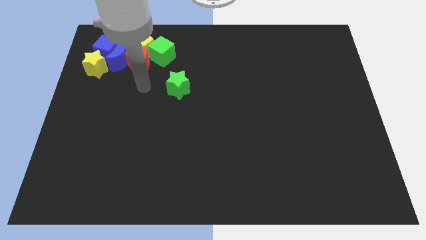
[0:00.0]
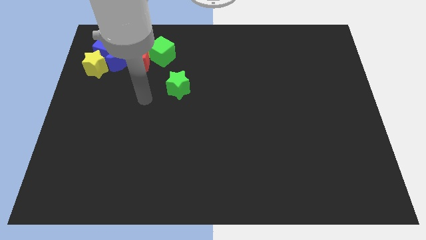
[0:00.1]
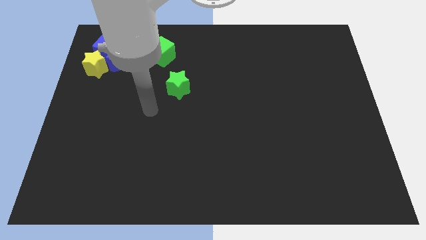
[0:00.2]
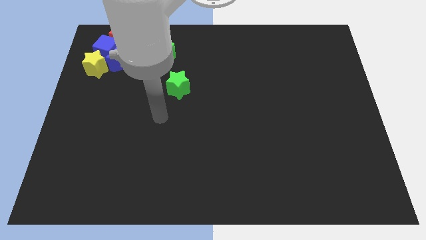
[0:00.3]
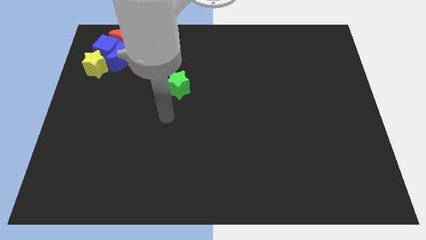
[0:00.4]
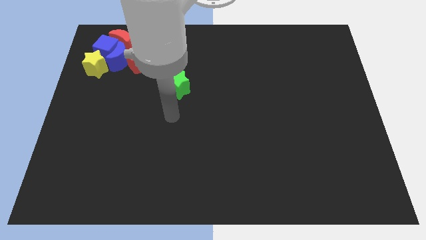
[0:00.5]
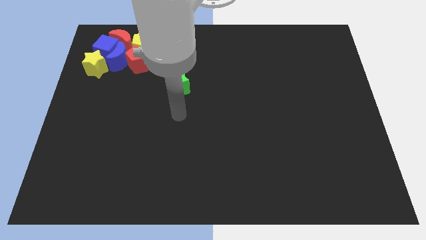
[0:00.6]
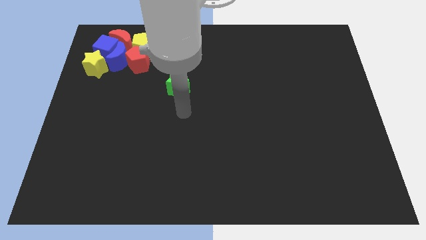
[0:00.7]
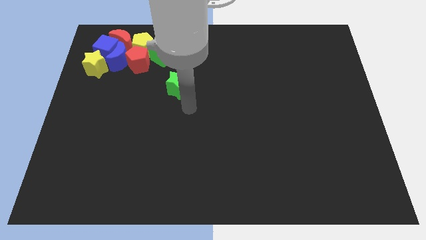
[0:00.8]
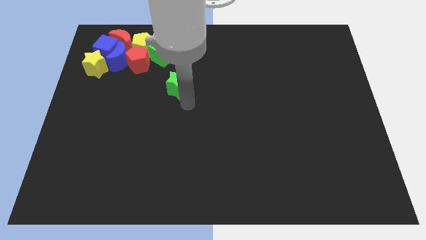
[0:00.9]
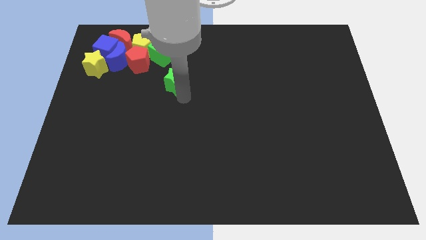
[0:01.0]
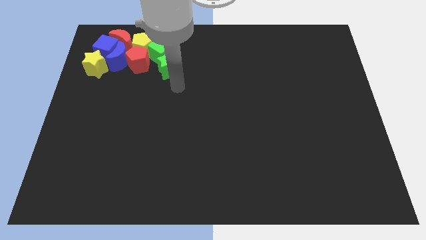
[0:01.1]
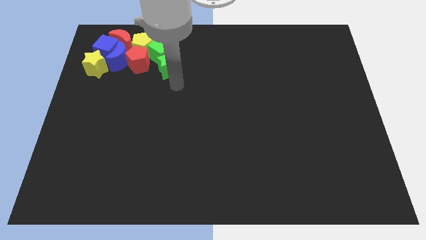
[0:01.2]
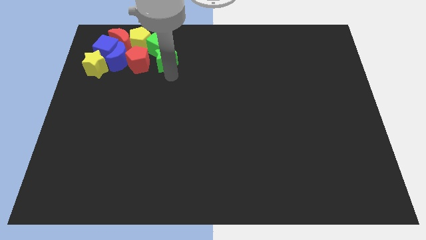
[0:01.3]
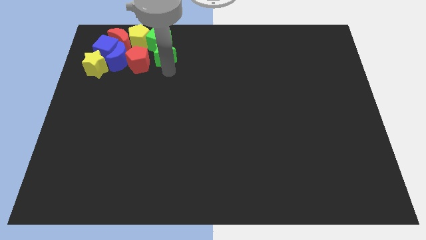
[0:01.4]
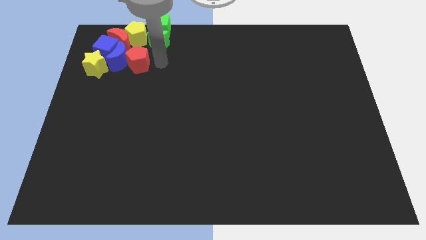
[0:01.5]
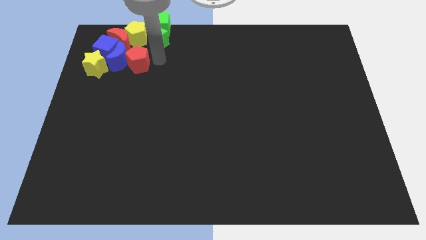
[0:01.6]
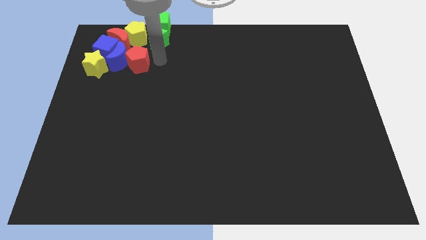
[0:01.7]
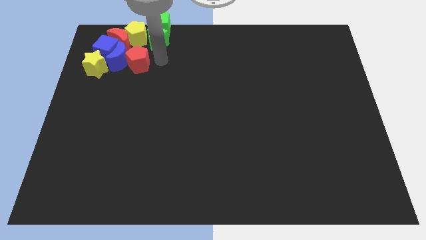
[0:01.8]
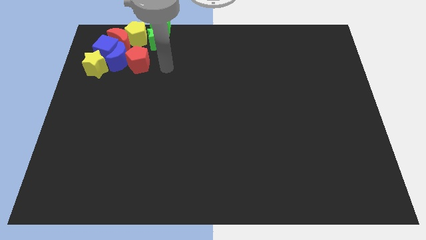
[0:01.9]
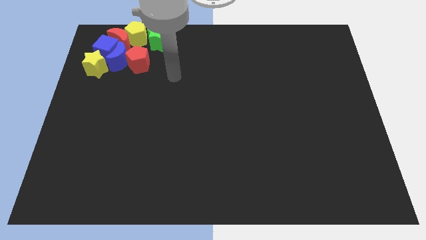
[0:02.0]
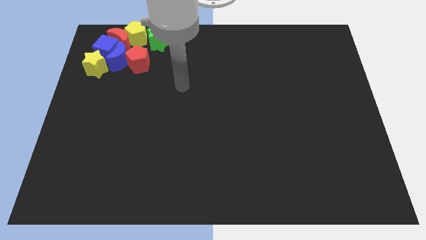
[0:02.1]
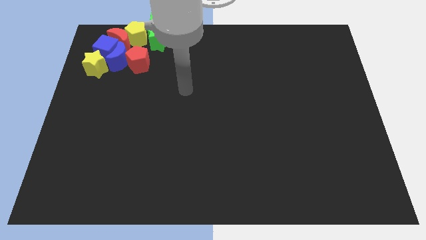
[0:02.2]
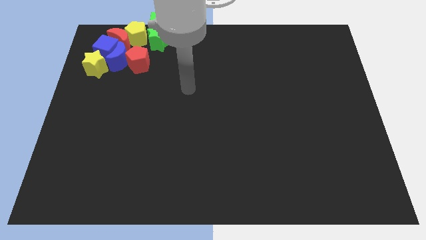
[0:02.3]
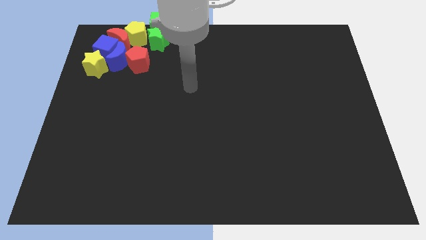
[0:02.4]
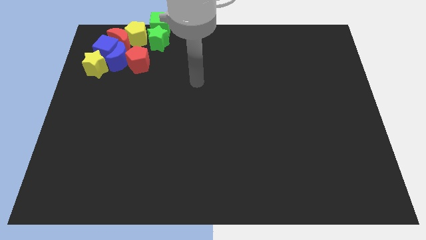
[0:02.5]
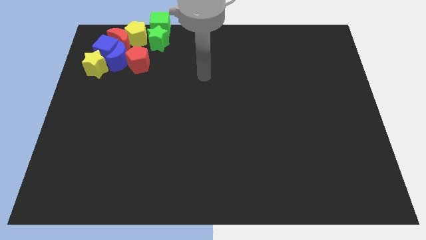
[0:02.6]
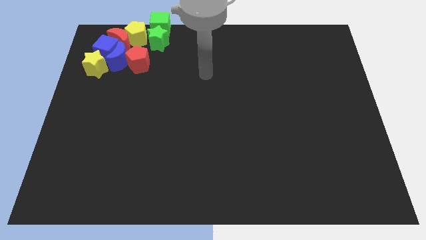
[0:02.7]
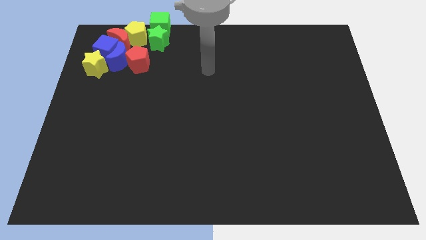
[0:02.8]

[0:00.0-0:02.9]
move the green star and the green cube towards the top of the board

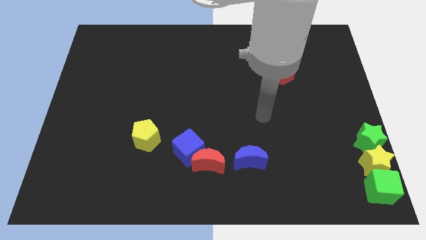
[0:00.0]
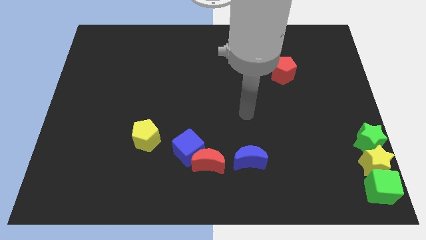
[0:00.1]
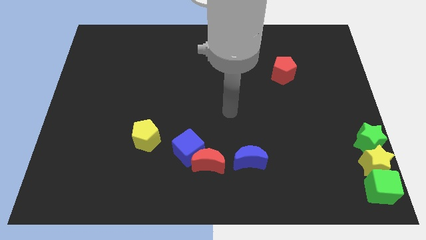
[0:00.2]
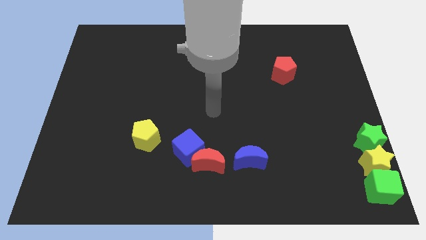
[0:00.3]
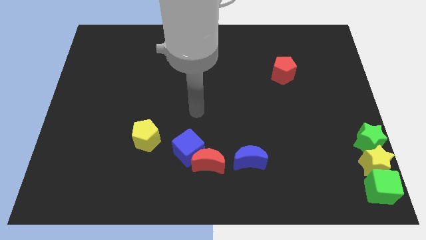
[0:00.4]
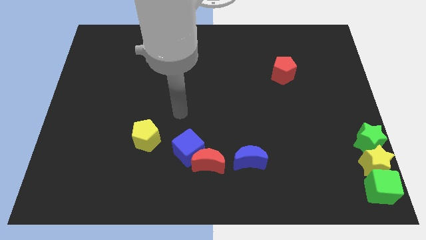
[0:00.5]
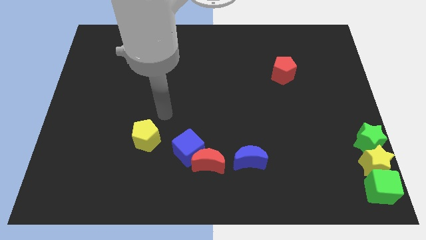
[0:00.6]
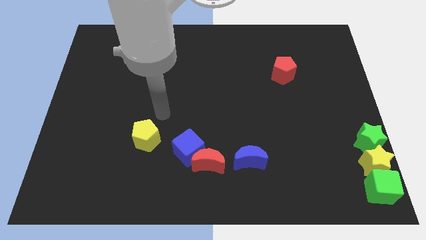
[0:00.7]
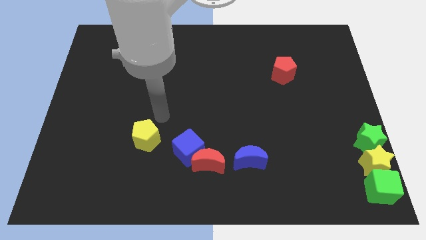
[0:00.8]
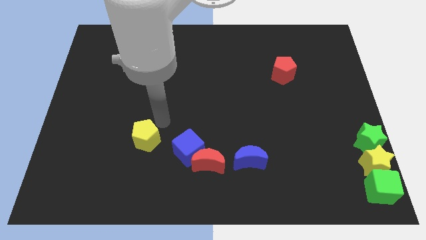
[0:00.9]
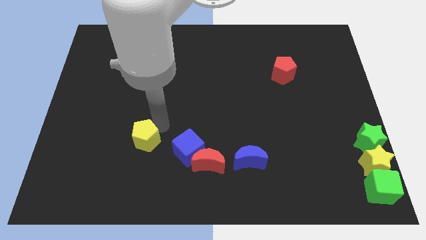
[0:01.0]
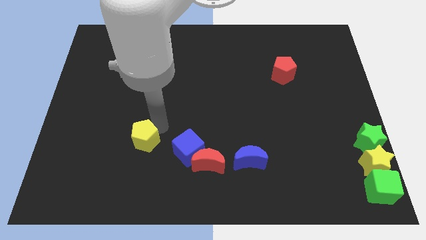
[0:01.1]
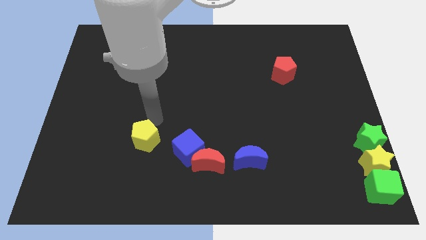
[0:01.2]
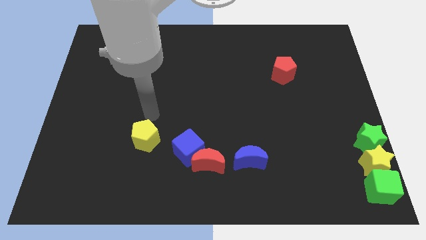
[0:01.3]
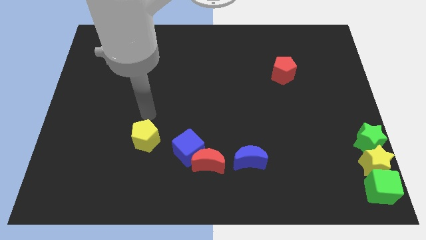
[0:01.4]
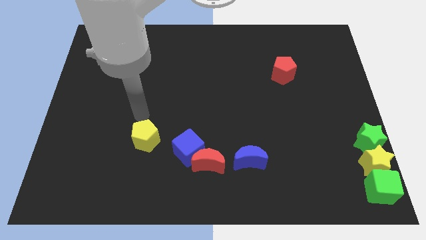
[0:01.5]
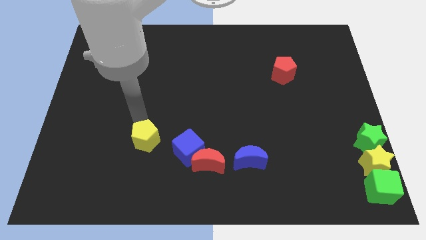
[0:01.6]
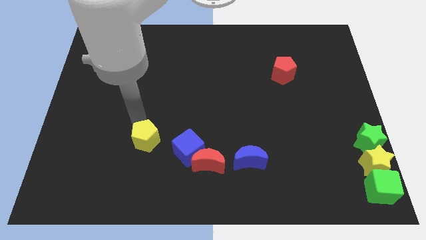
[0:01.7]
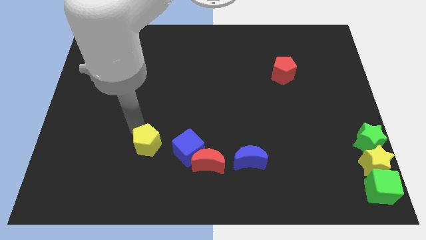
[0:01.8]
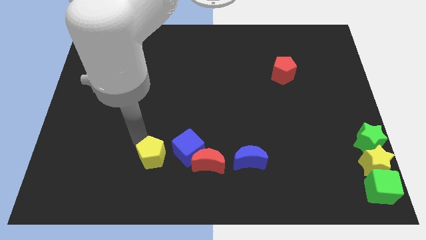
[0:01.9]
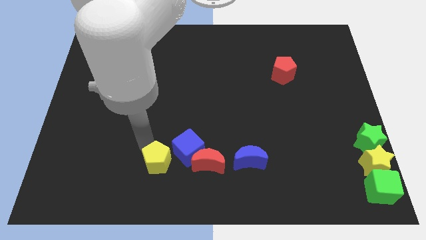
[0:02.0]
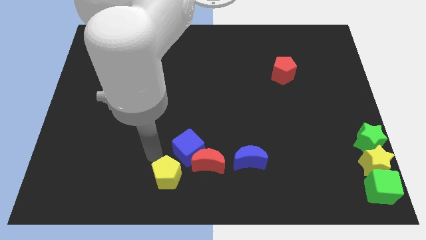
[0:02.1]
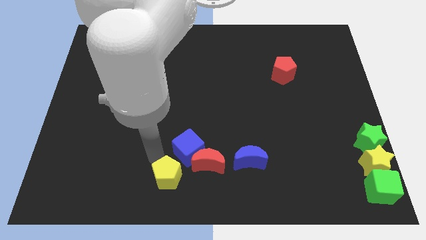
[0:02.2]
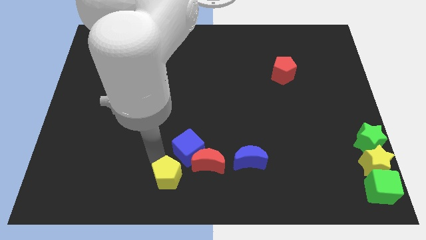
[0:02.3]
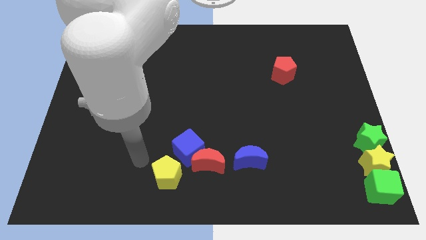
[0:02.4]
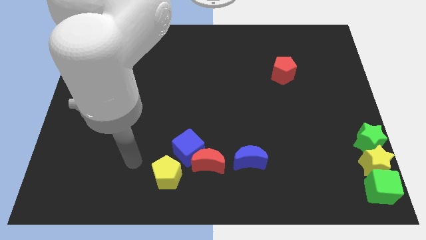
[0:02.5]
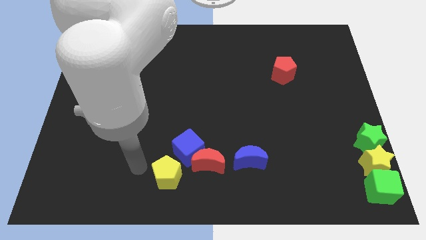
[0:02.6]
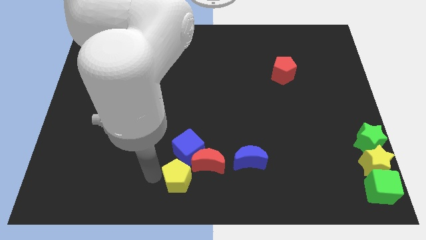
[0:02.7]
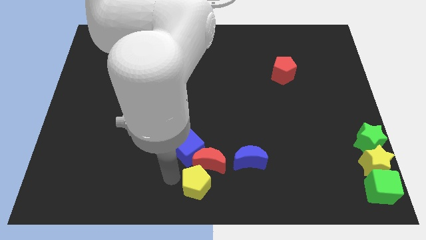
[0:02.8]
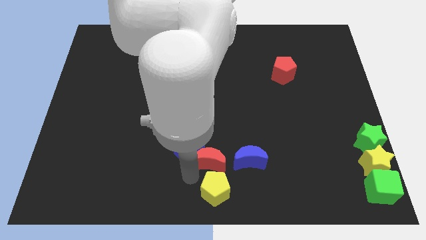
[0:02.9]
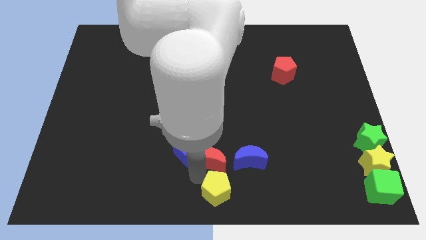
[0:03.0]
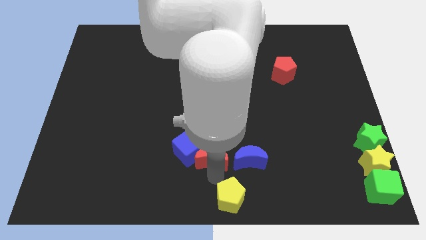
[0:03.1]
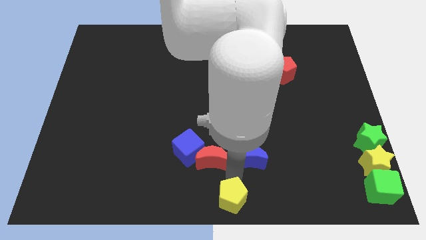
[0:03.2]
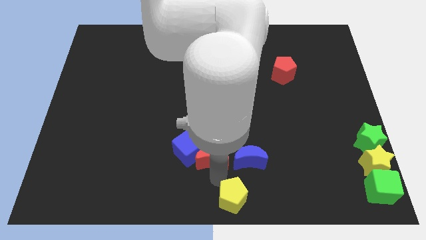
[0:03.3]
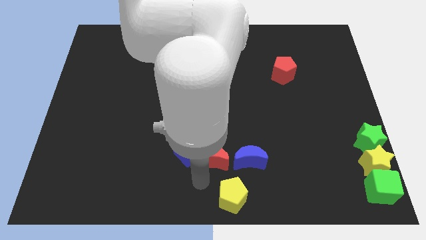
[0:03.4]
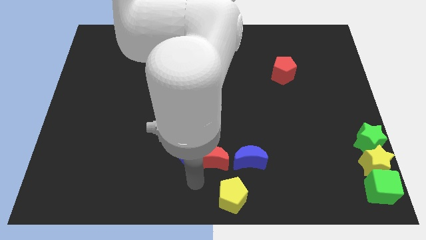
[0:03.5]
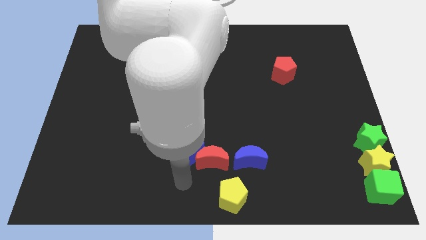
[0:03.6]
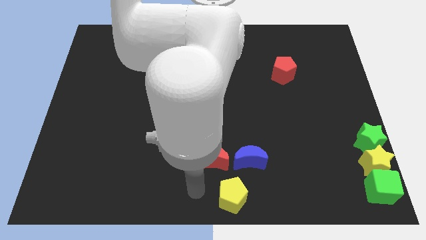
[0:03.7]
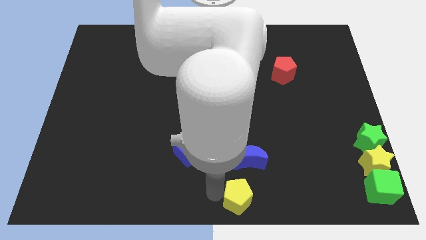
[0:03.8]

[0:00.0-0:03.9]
place the yellow pentagon vertically below the blue crescent

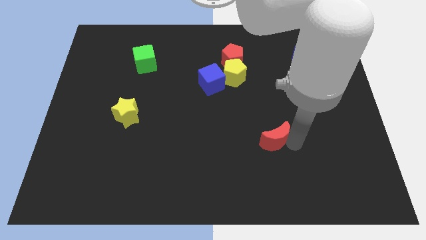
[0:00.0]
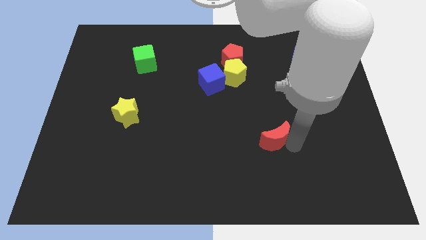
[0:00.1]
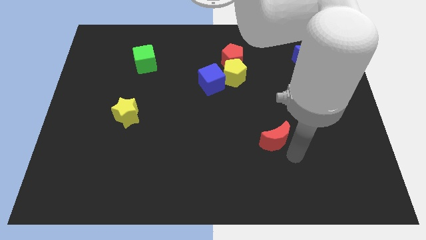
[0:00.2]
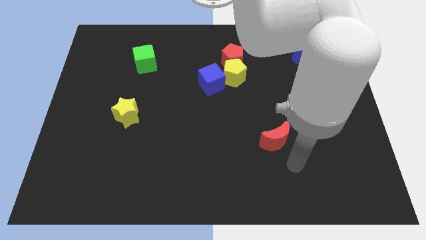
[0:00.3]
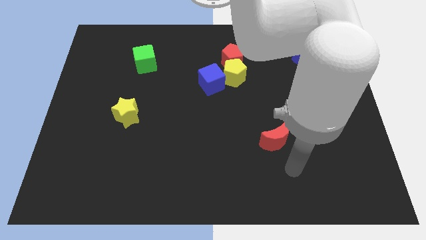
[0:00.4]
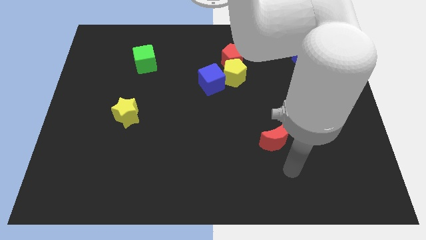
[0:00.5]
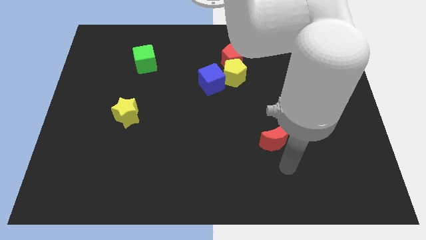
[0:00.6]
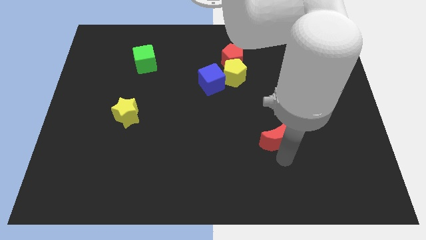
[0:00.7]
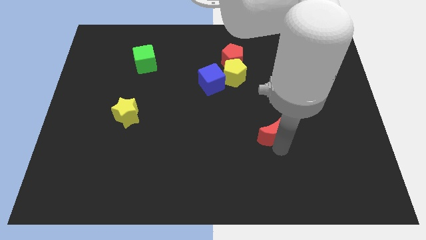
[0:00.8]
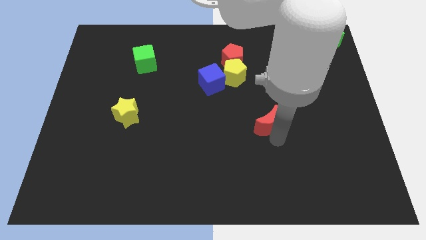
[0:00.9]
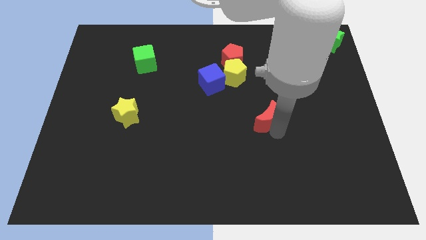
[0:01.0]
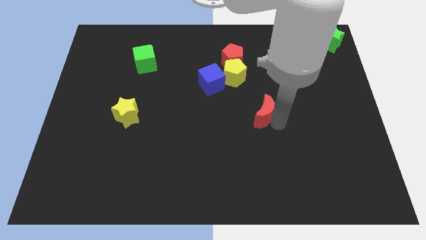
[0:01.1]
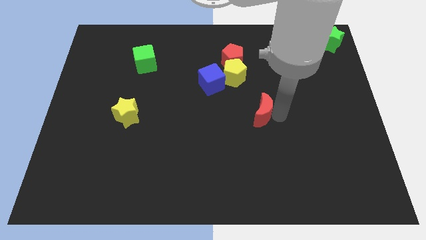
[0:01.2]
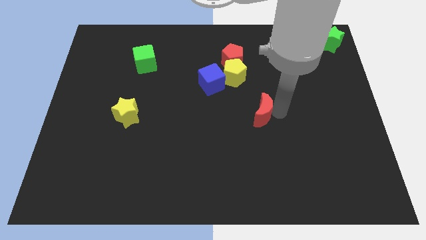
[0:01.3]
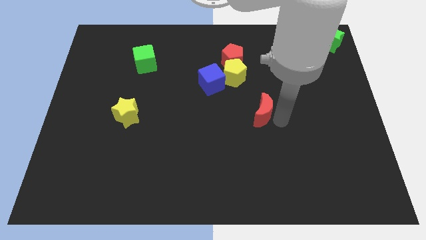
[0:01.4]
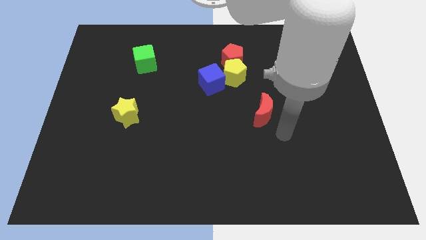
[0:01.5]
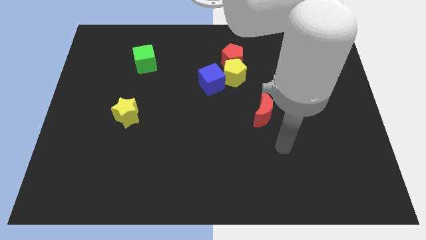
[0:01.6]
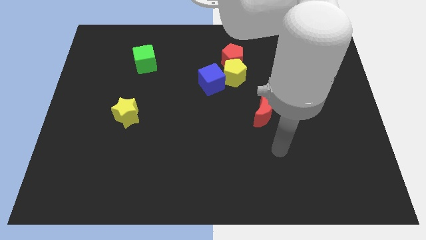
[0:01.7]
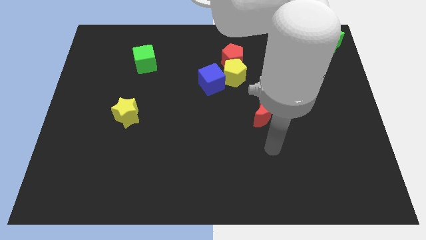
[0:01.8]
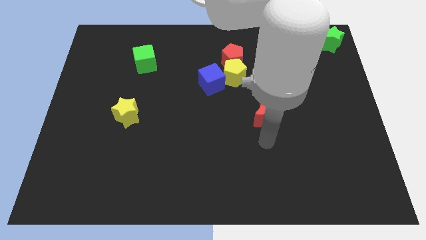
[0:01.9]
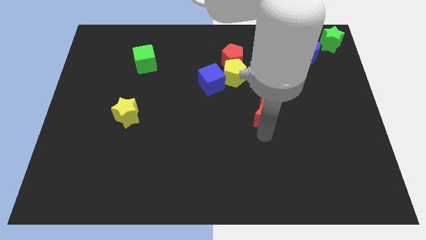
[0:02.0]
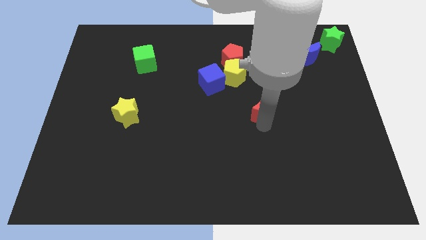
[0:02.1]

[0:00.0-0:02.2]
move the red moon to the center of the board

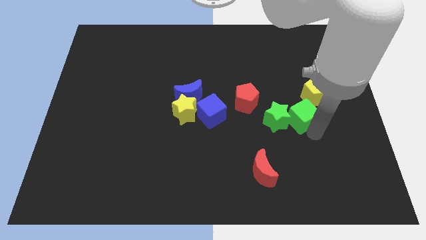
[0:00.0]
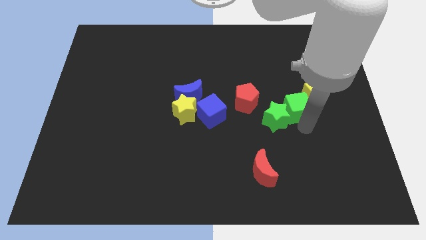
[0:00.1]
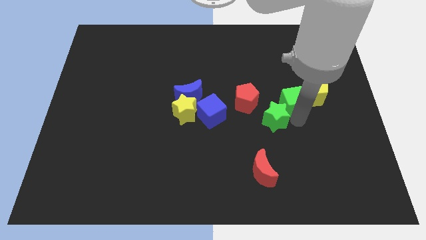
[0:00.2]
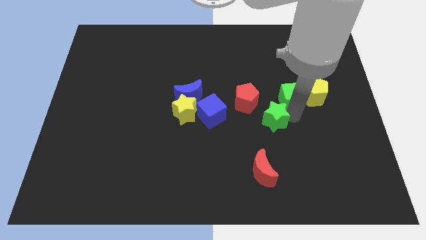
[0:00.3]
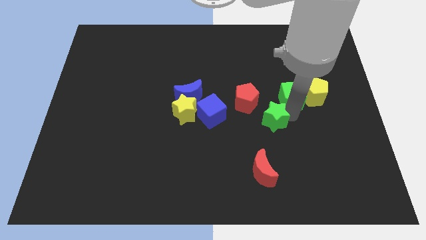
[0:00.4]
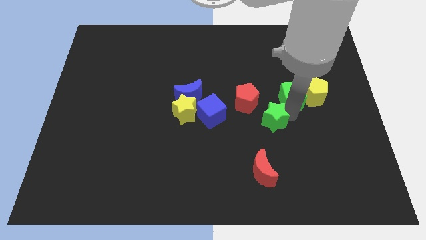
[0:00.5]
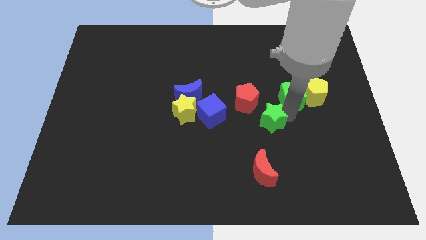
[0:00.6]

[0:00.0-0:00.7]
move the green cube to the left of the yellow pentagon
